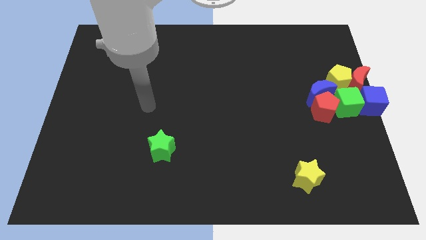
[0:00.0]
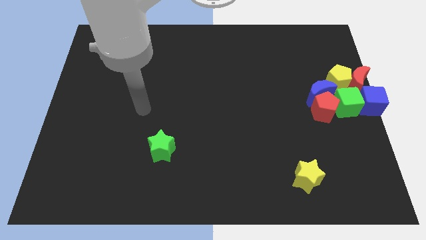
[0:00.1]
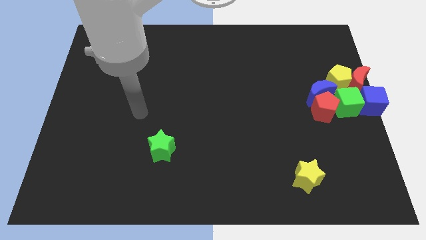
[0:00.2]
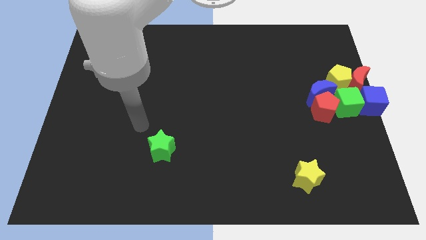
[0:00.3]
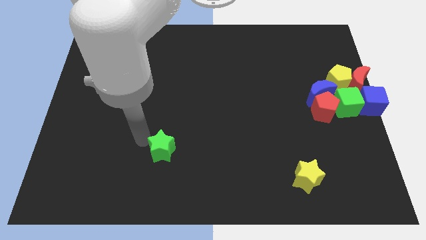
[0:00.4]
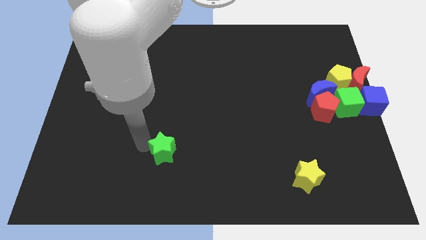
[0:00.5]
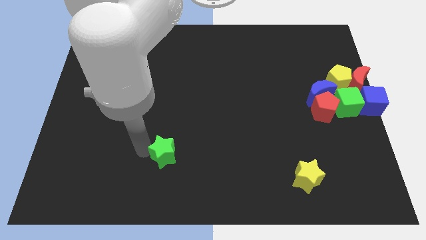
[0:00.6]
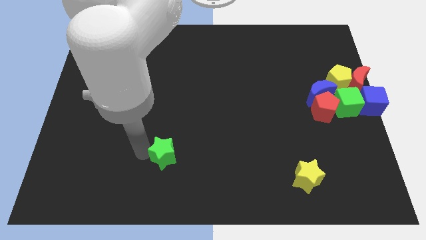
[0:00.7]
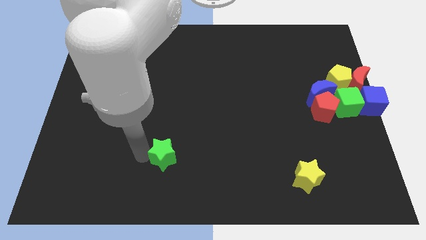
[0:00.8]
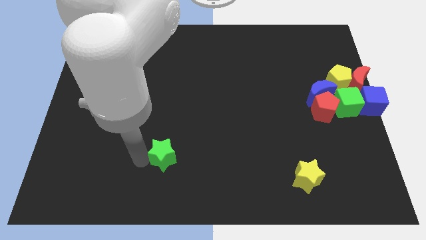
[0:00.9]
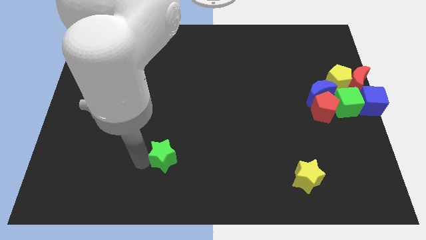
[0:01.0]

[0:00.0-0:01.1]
slightly touch the green star

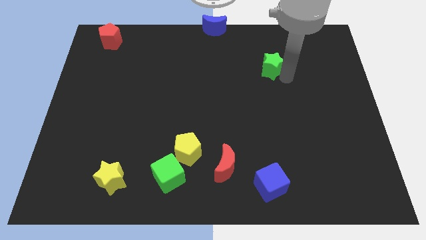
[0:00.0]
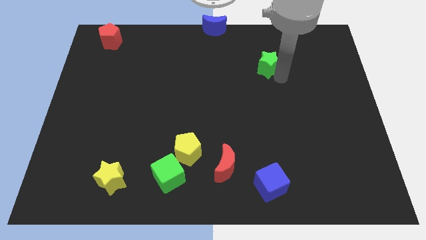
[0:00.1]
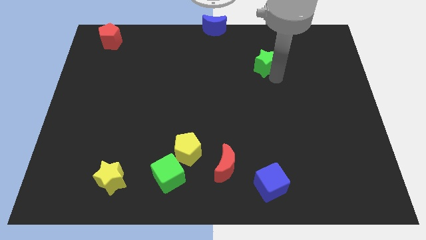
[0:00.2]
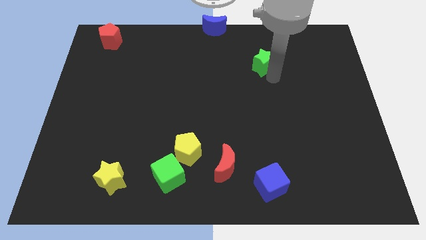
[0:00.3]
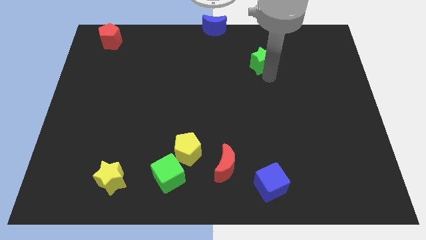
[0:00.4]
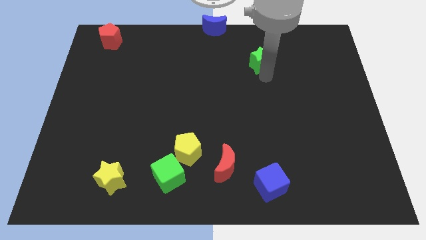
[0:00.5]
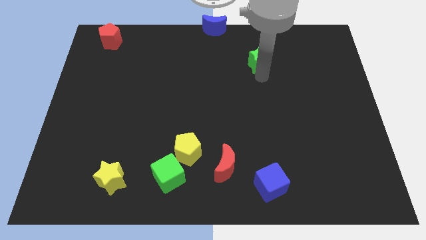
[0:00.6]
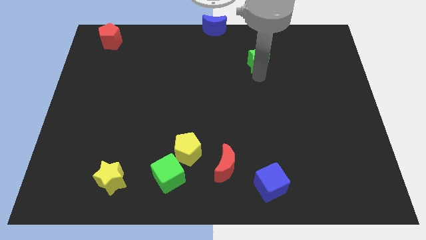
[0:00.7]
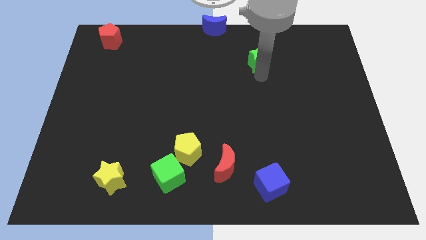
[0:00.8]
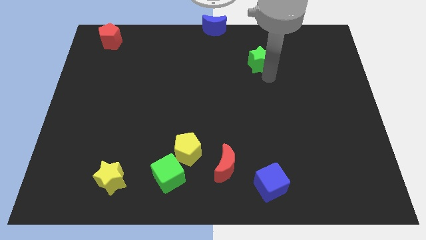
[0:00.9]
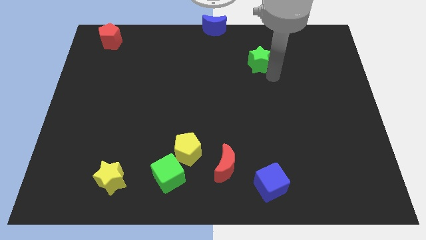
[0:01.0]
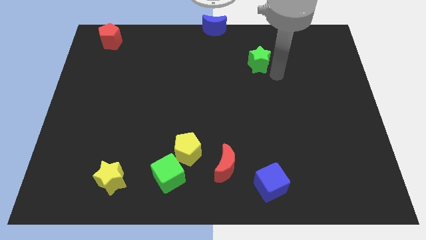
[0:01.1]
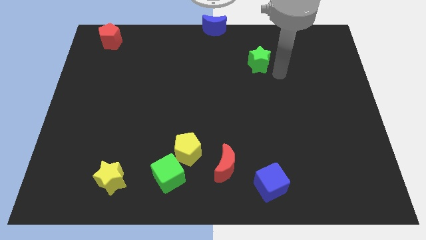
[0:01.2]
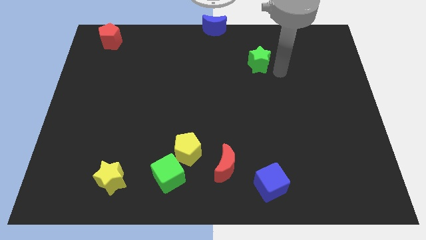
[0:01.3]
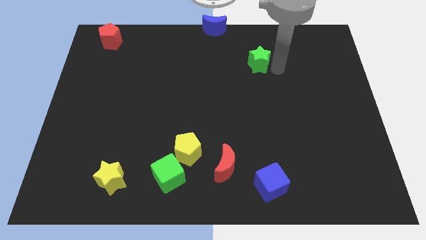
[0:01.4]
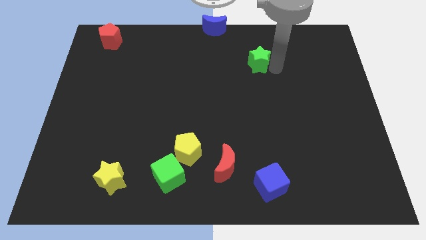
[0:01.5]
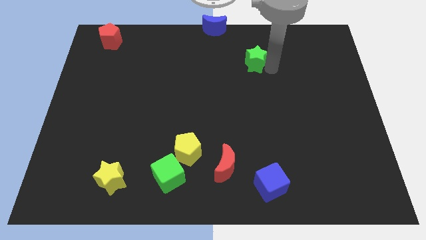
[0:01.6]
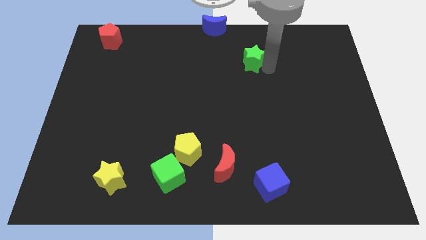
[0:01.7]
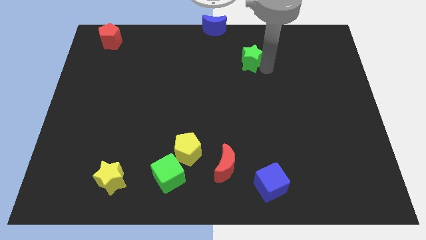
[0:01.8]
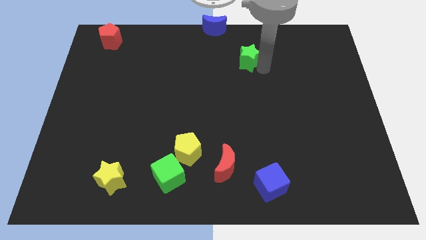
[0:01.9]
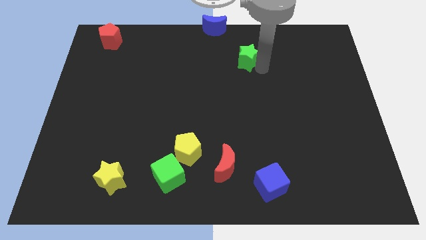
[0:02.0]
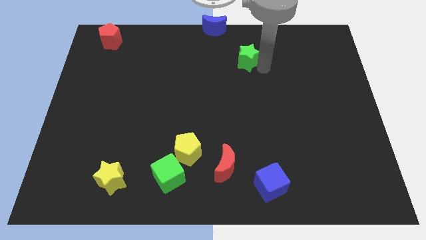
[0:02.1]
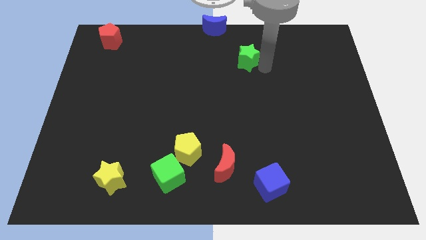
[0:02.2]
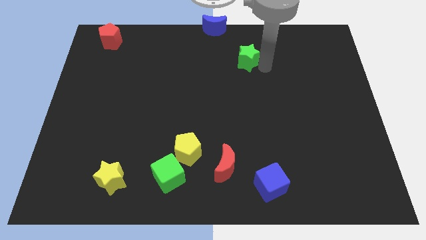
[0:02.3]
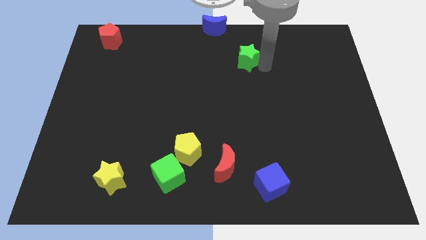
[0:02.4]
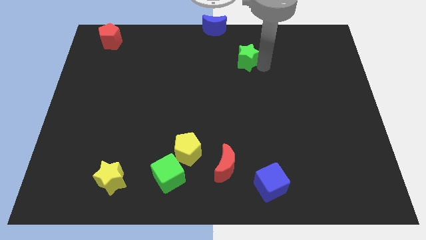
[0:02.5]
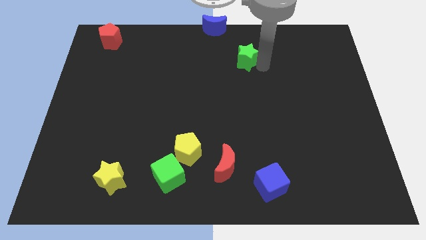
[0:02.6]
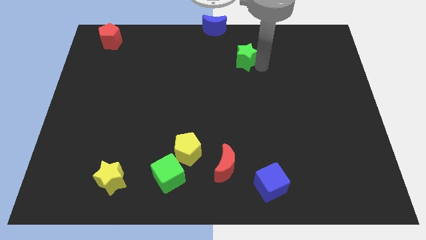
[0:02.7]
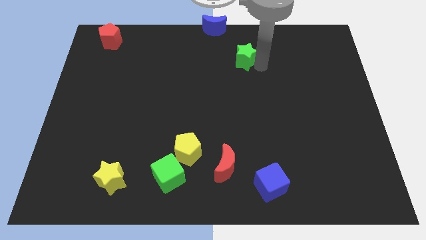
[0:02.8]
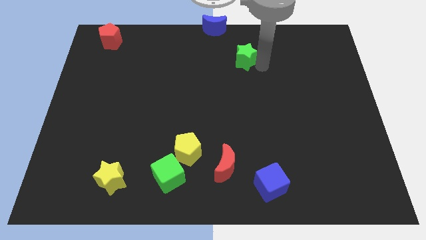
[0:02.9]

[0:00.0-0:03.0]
move the green star diagonally to the blue moon

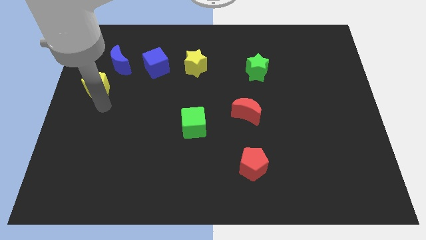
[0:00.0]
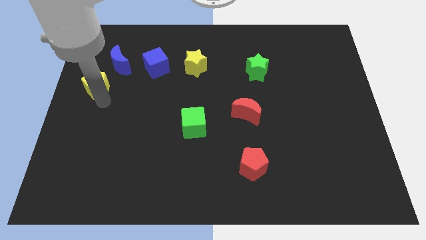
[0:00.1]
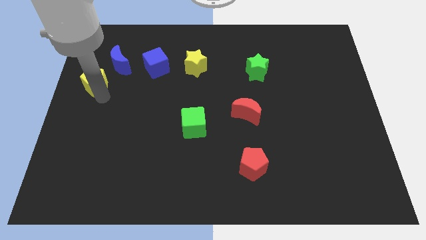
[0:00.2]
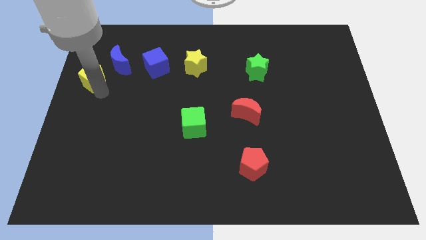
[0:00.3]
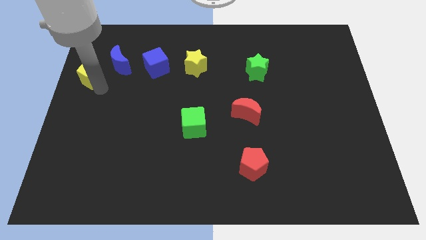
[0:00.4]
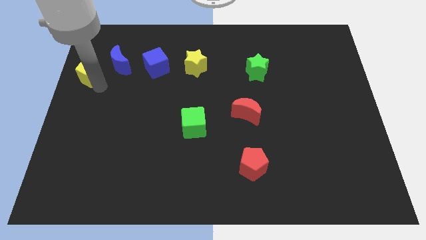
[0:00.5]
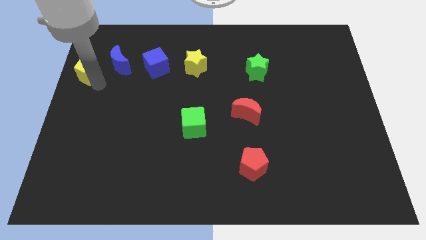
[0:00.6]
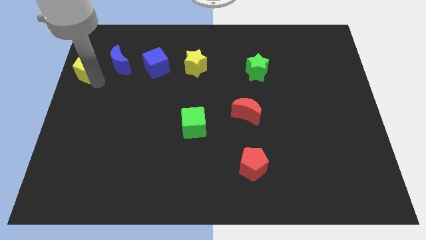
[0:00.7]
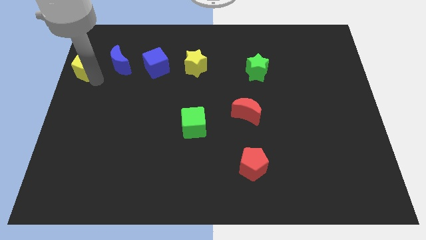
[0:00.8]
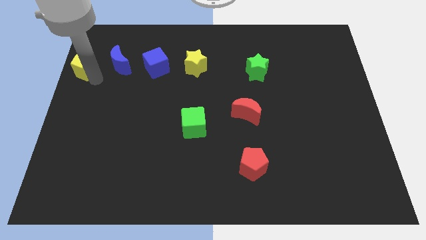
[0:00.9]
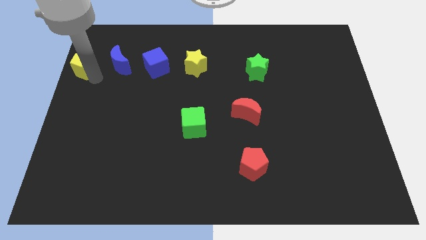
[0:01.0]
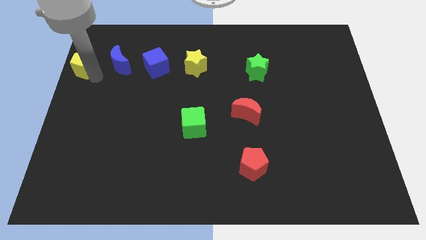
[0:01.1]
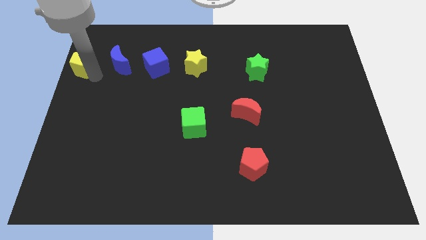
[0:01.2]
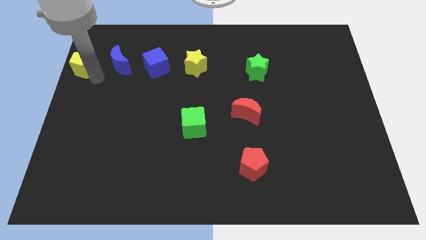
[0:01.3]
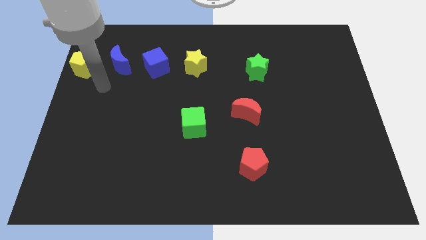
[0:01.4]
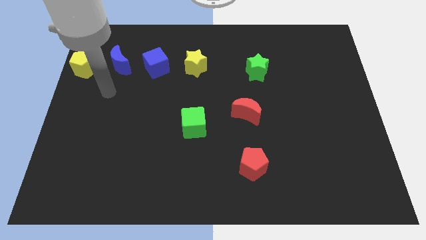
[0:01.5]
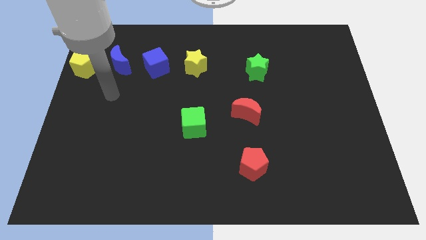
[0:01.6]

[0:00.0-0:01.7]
place the yellow pentagon at left side of the blue crescent

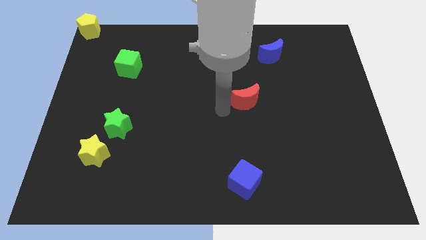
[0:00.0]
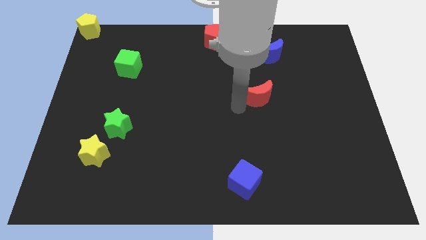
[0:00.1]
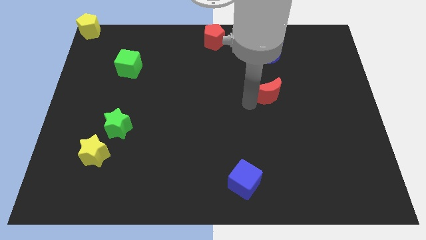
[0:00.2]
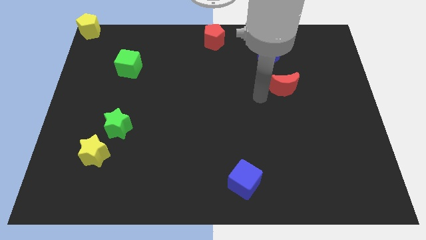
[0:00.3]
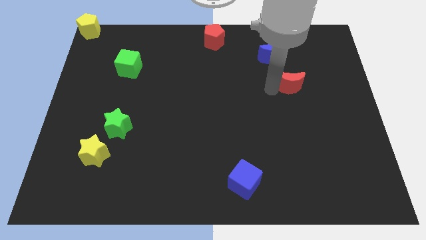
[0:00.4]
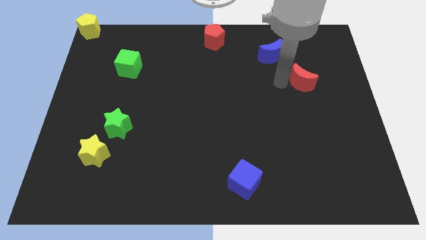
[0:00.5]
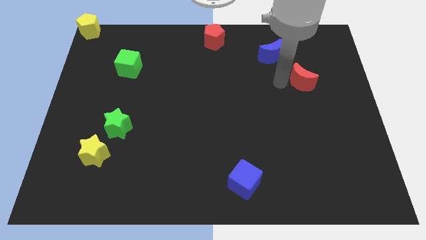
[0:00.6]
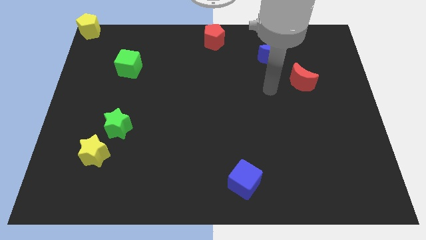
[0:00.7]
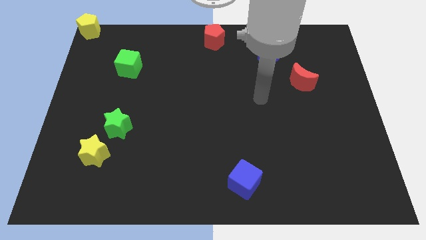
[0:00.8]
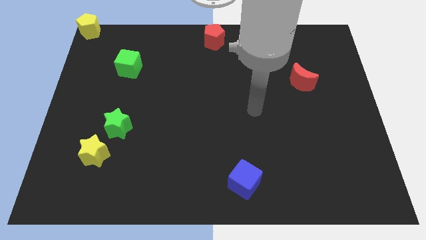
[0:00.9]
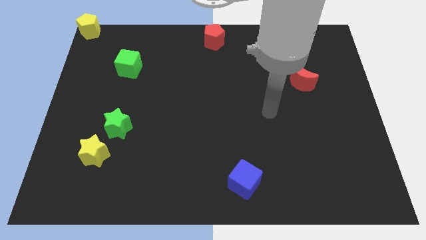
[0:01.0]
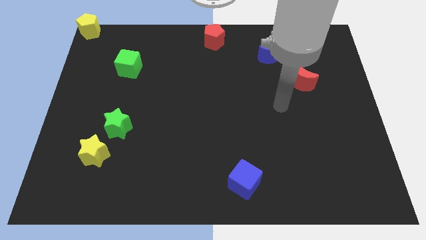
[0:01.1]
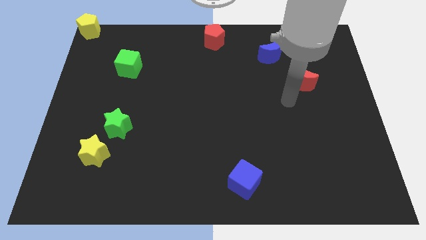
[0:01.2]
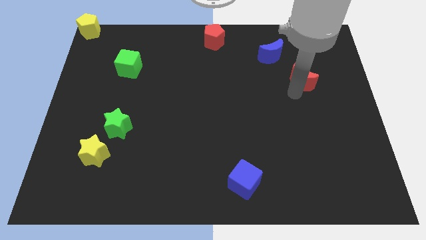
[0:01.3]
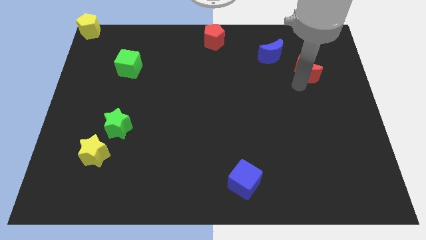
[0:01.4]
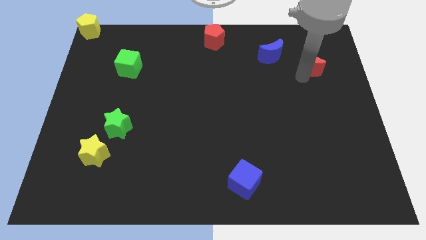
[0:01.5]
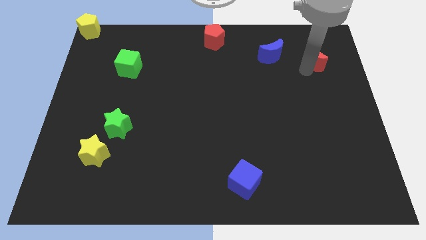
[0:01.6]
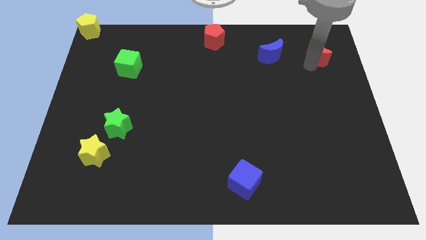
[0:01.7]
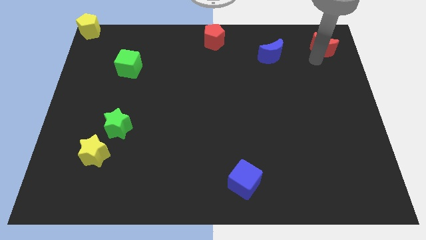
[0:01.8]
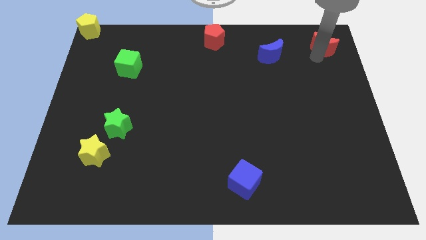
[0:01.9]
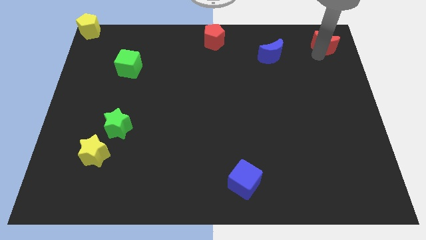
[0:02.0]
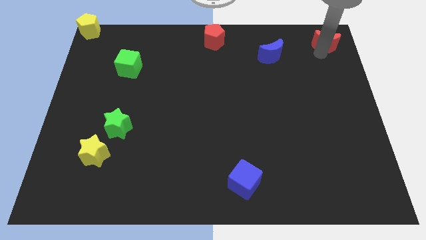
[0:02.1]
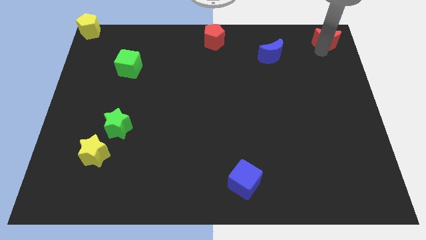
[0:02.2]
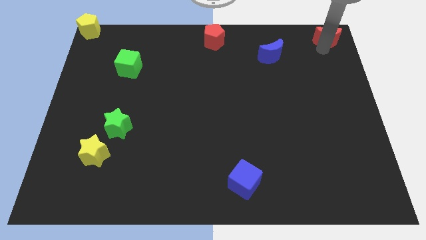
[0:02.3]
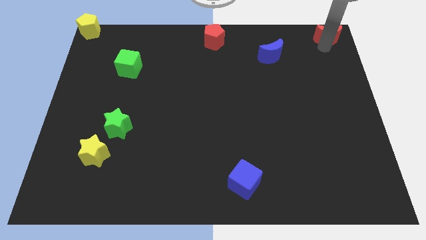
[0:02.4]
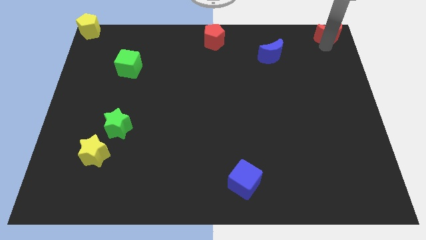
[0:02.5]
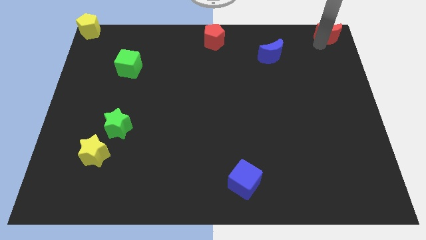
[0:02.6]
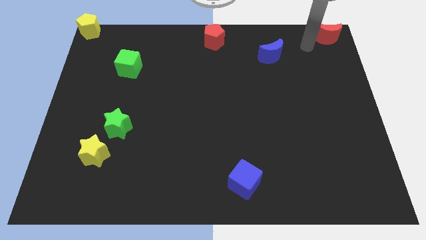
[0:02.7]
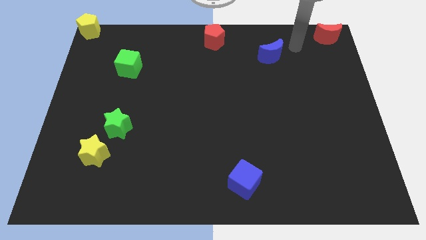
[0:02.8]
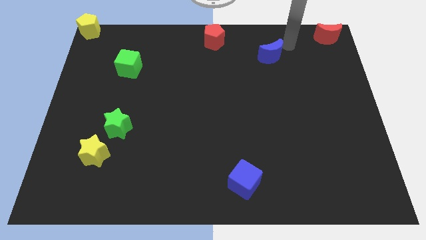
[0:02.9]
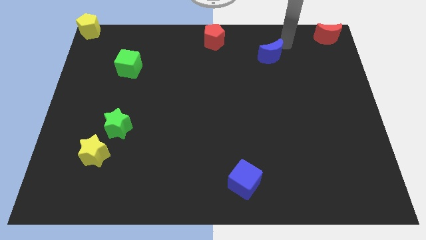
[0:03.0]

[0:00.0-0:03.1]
put the red moon to the top right corner

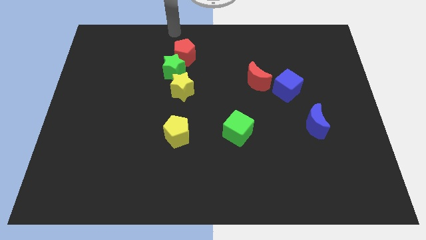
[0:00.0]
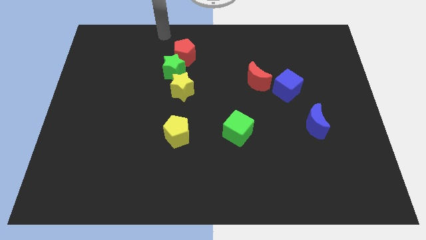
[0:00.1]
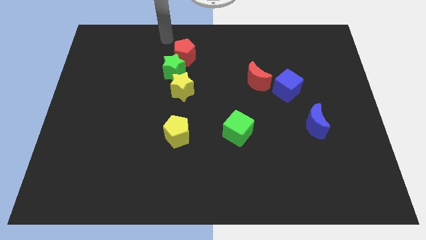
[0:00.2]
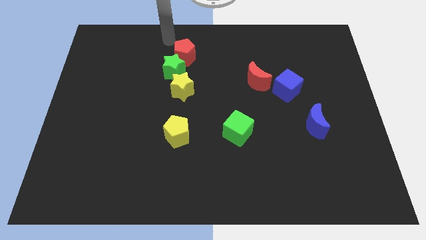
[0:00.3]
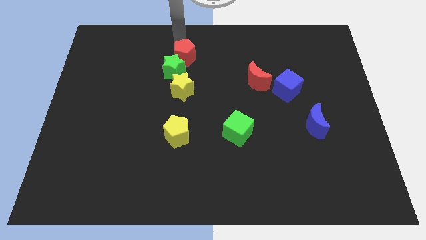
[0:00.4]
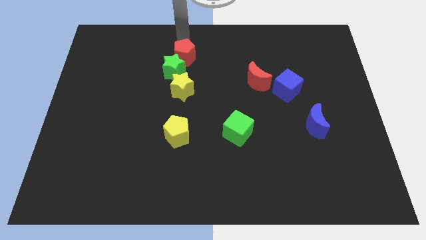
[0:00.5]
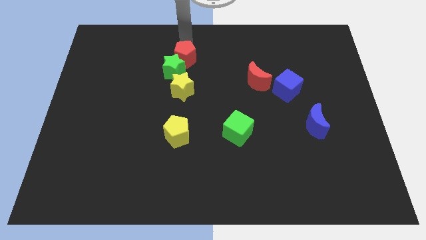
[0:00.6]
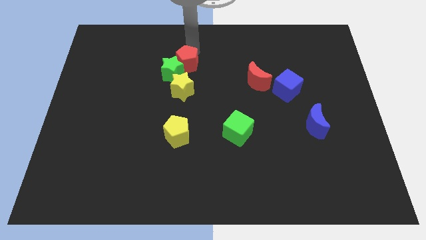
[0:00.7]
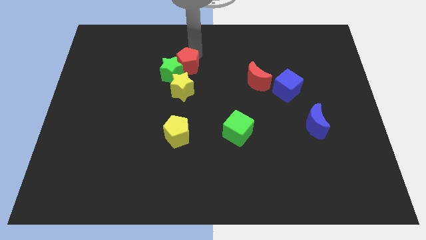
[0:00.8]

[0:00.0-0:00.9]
push the red pentagon into the green star
